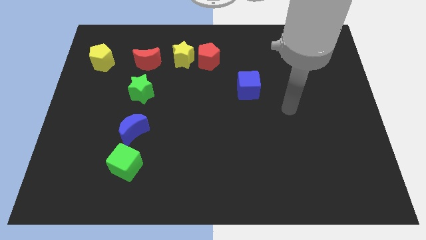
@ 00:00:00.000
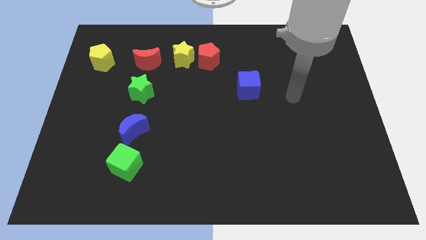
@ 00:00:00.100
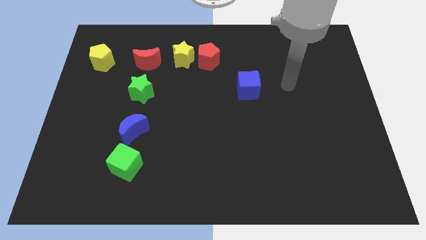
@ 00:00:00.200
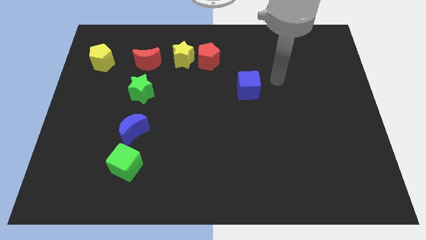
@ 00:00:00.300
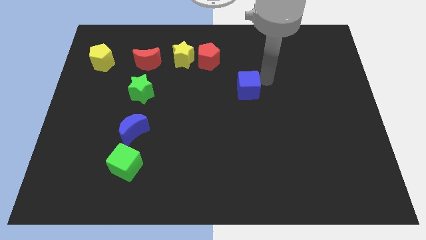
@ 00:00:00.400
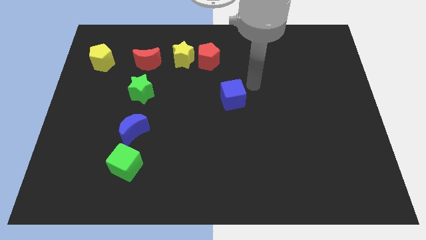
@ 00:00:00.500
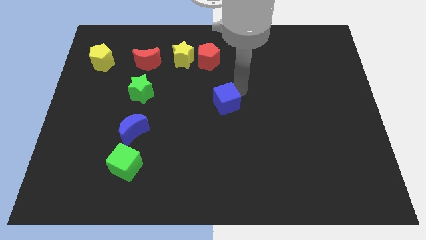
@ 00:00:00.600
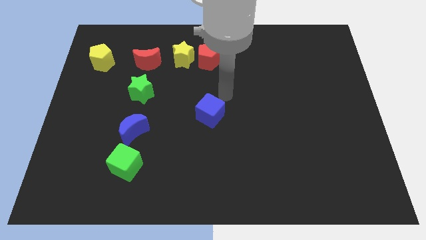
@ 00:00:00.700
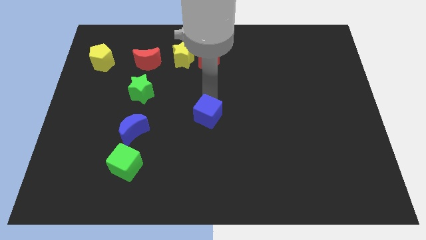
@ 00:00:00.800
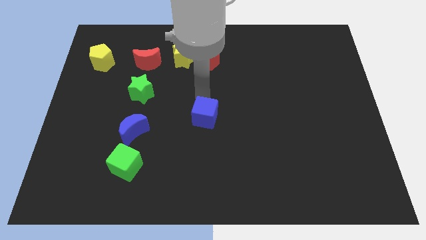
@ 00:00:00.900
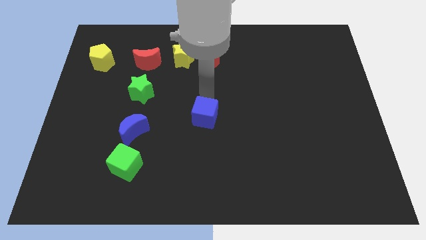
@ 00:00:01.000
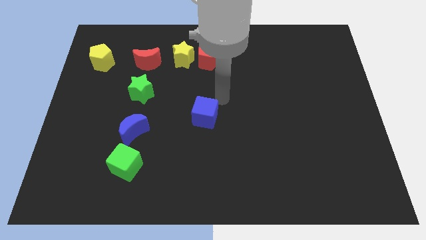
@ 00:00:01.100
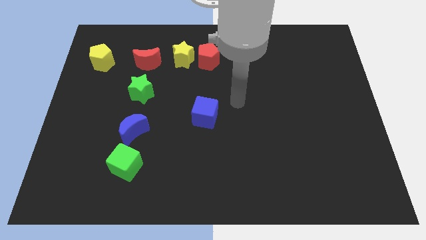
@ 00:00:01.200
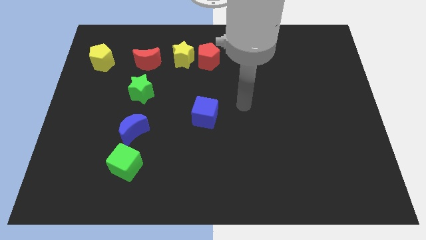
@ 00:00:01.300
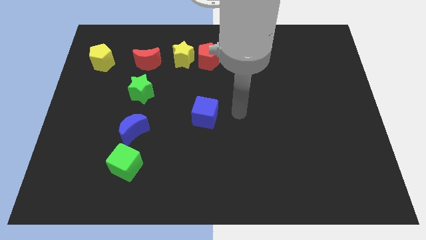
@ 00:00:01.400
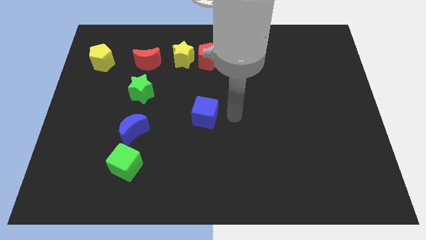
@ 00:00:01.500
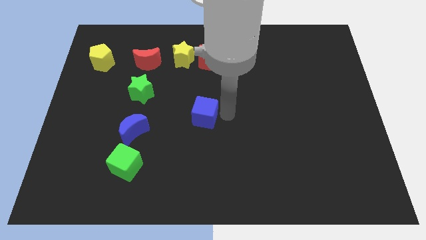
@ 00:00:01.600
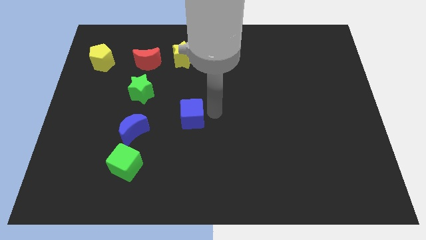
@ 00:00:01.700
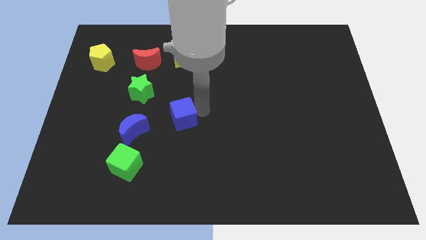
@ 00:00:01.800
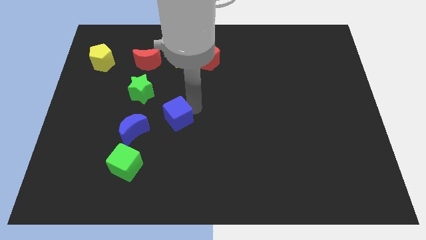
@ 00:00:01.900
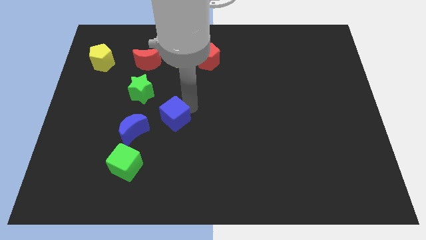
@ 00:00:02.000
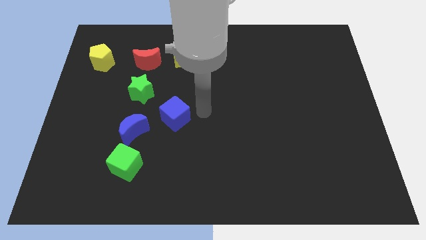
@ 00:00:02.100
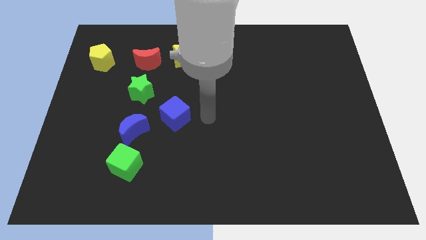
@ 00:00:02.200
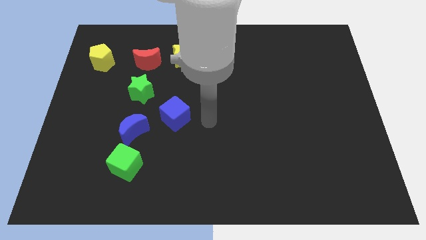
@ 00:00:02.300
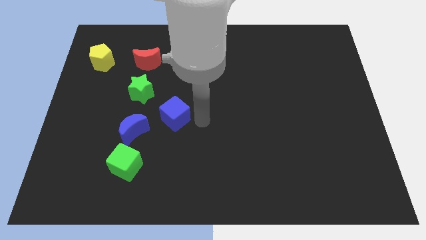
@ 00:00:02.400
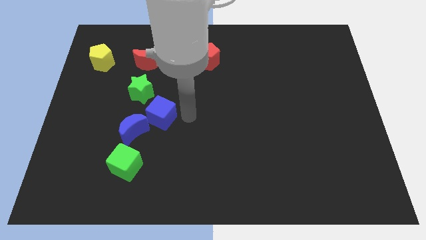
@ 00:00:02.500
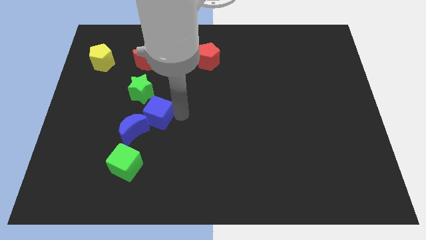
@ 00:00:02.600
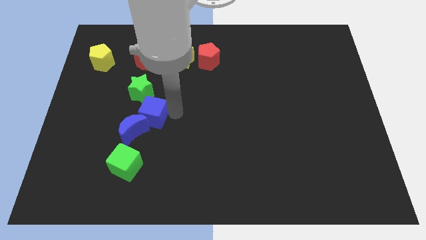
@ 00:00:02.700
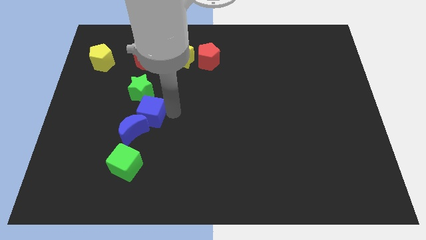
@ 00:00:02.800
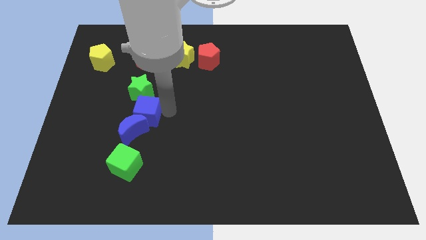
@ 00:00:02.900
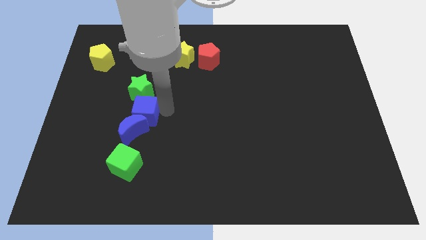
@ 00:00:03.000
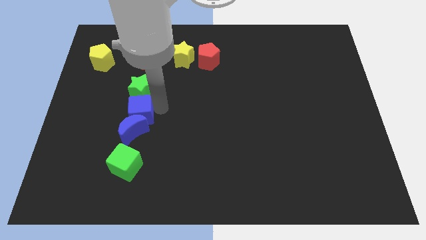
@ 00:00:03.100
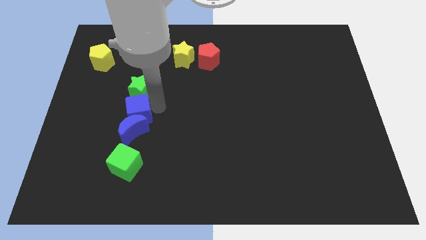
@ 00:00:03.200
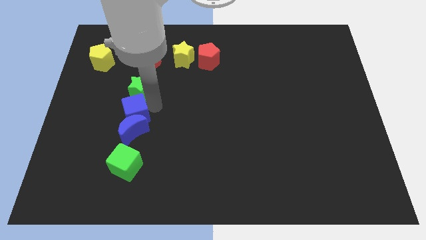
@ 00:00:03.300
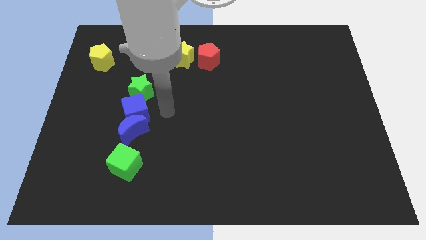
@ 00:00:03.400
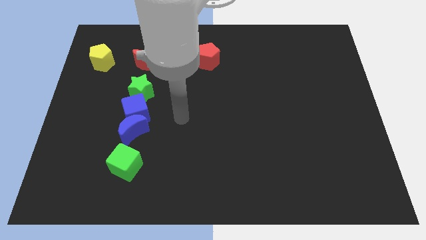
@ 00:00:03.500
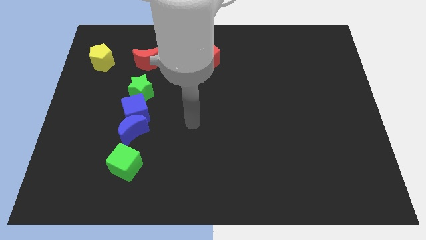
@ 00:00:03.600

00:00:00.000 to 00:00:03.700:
push the blue cube in between the green star and blue moon

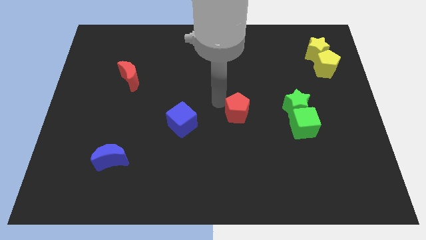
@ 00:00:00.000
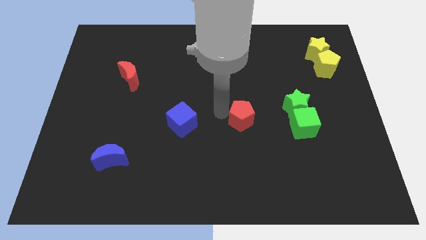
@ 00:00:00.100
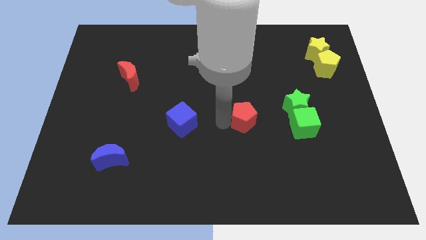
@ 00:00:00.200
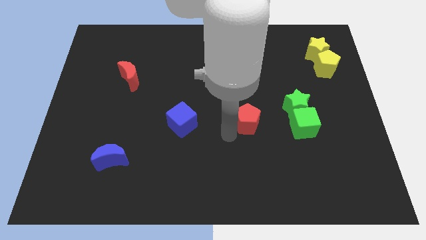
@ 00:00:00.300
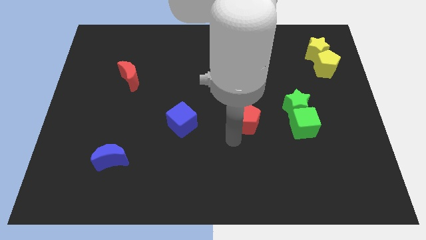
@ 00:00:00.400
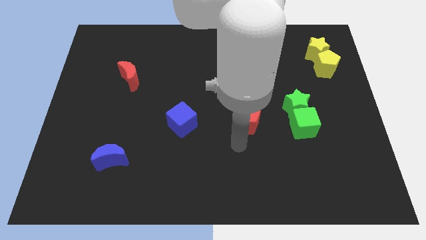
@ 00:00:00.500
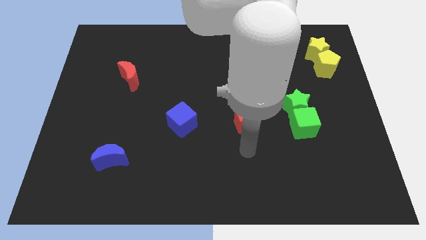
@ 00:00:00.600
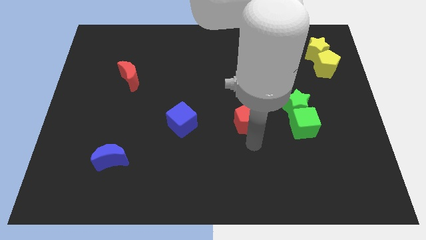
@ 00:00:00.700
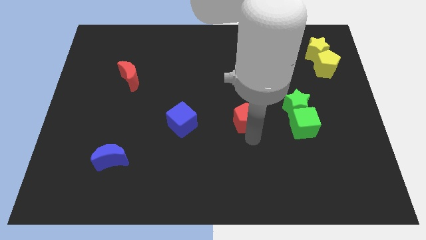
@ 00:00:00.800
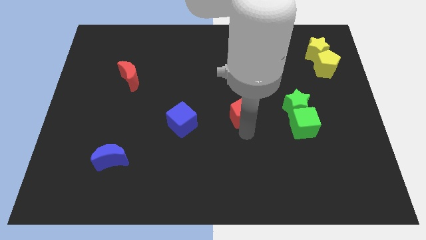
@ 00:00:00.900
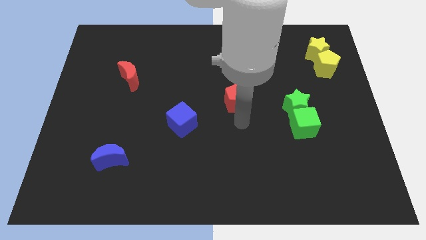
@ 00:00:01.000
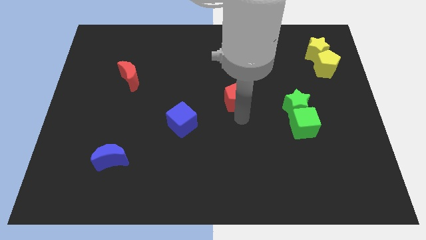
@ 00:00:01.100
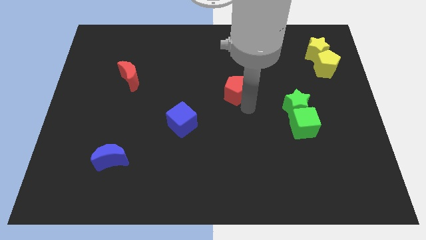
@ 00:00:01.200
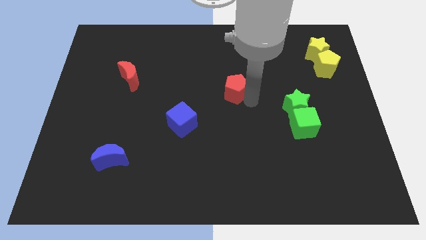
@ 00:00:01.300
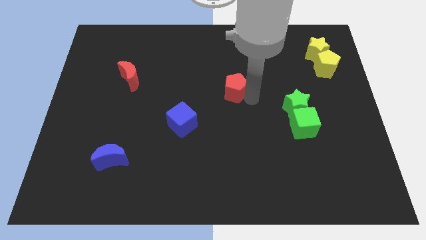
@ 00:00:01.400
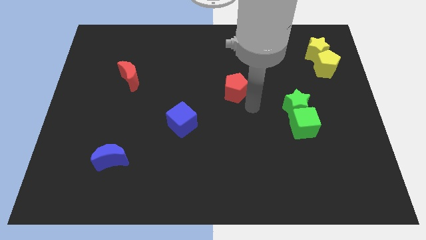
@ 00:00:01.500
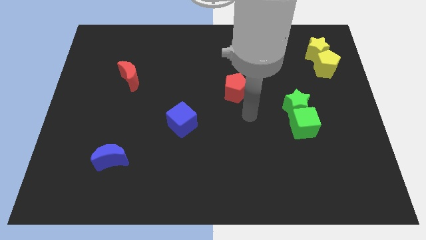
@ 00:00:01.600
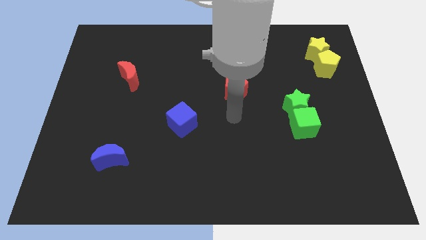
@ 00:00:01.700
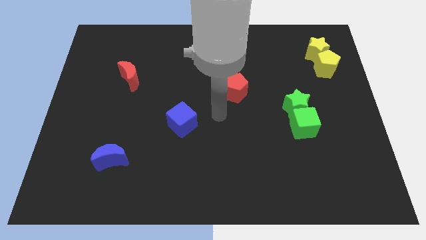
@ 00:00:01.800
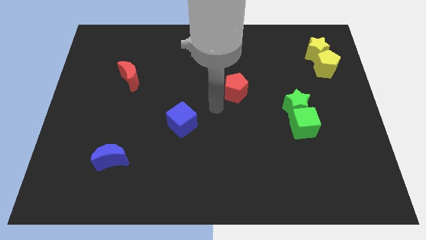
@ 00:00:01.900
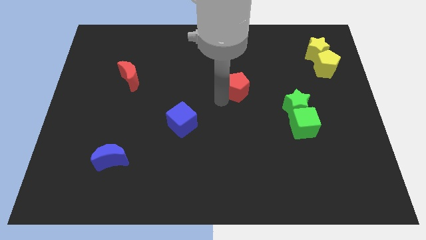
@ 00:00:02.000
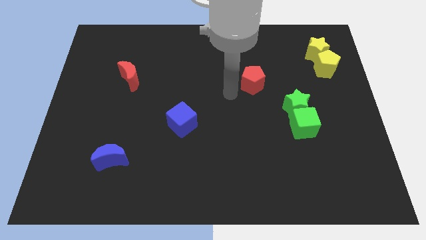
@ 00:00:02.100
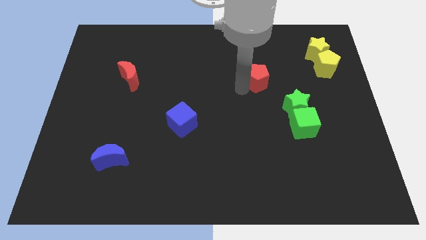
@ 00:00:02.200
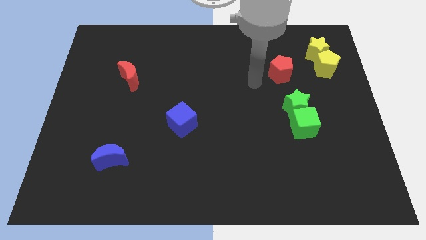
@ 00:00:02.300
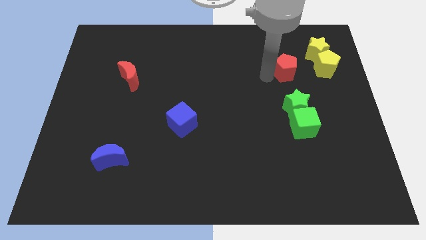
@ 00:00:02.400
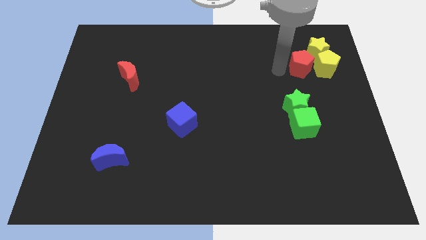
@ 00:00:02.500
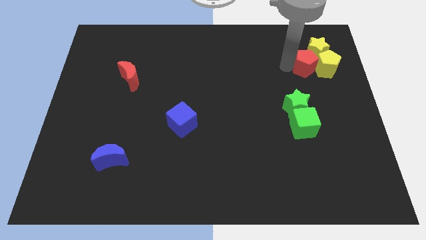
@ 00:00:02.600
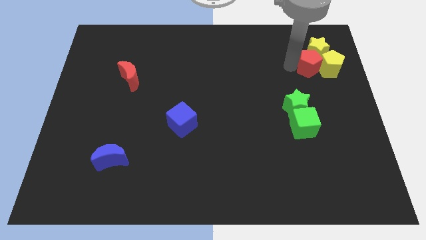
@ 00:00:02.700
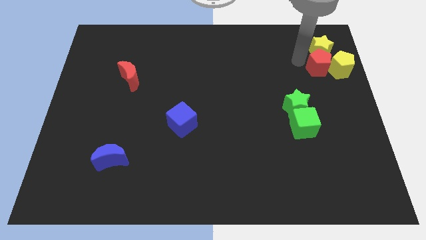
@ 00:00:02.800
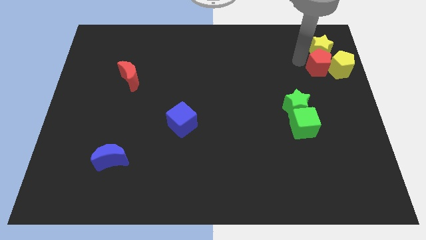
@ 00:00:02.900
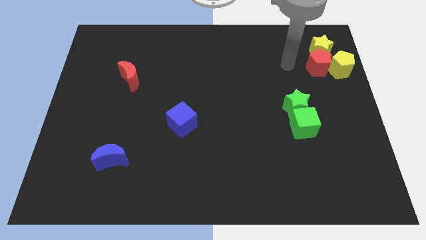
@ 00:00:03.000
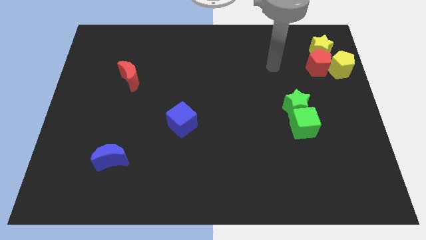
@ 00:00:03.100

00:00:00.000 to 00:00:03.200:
push the red pentagon into the yellow pentagon and the yellow star

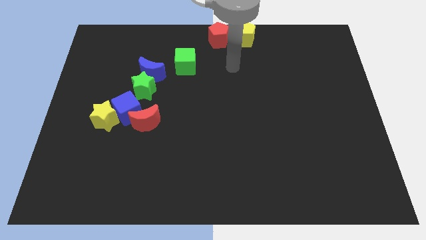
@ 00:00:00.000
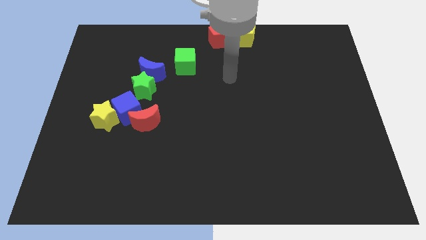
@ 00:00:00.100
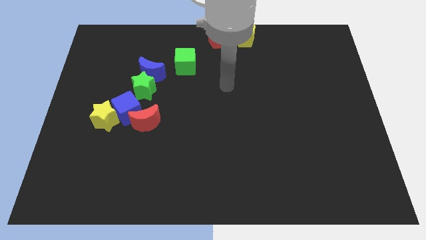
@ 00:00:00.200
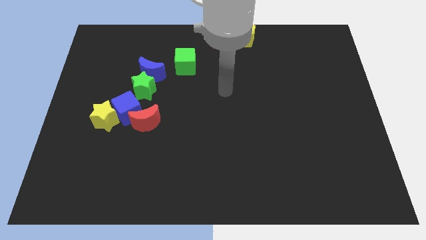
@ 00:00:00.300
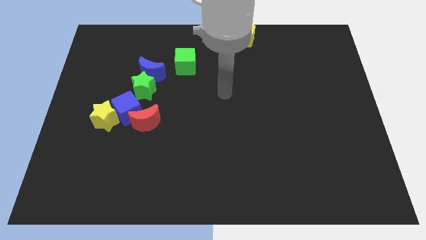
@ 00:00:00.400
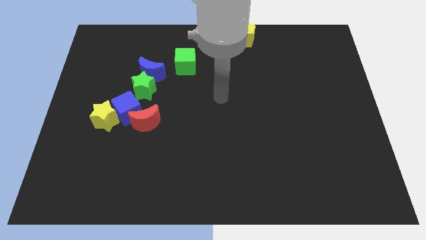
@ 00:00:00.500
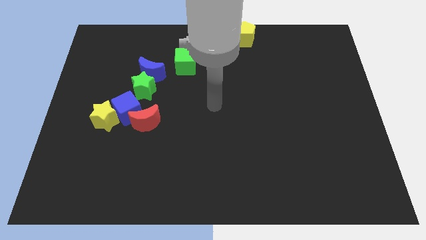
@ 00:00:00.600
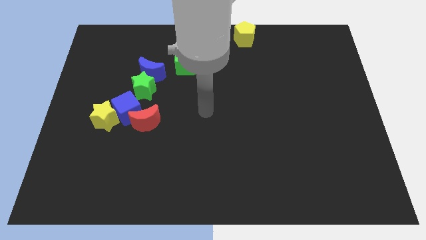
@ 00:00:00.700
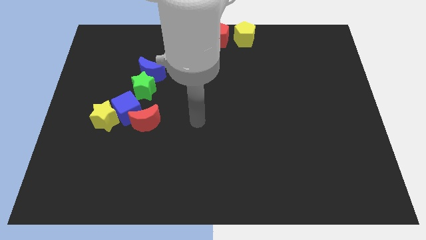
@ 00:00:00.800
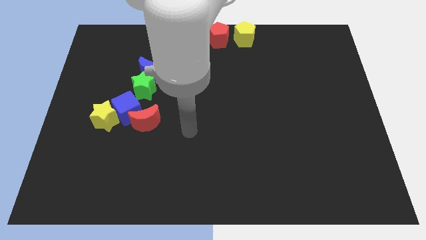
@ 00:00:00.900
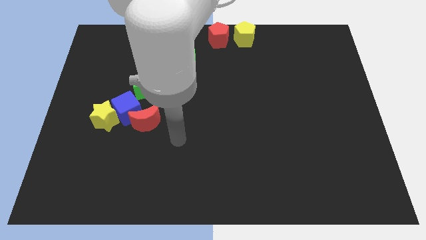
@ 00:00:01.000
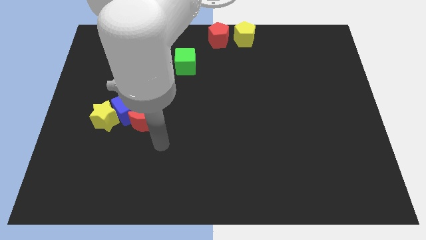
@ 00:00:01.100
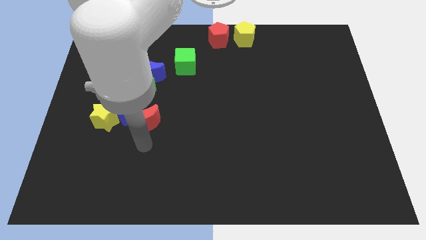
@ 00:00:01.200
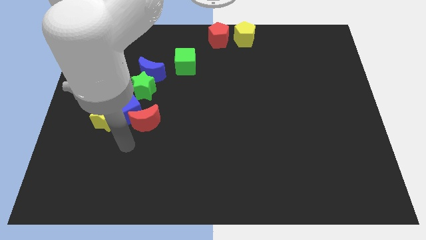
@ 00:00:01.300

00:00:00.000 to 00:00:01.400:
place your hand above the red crescent

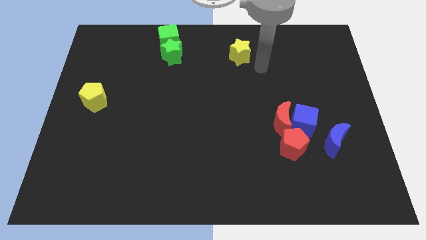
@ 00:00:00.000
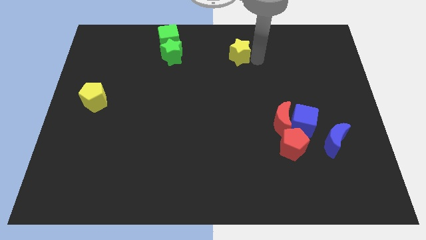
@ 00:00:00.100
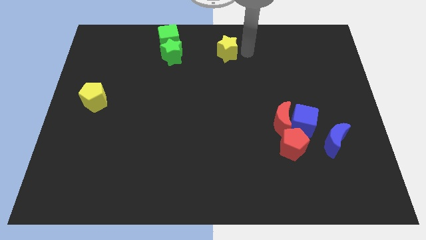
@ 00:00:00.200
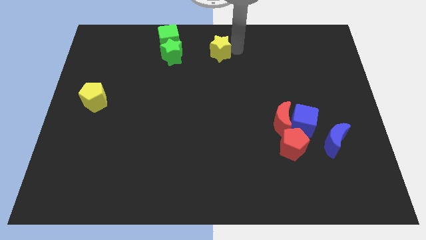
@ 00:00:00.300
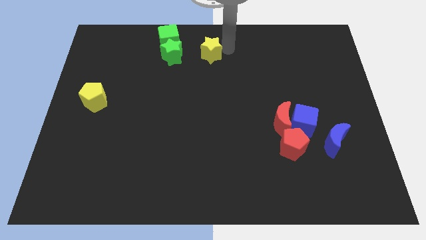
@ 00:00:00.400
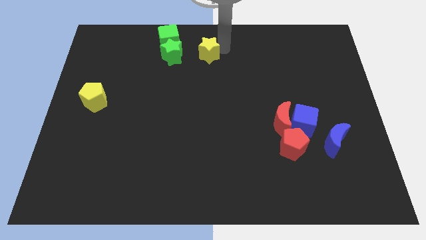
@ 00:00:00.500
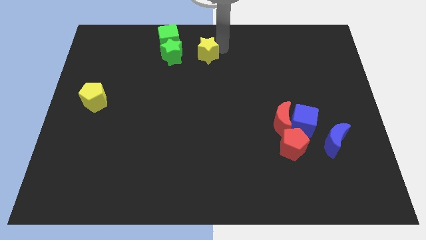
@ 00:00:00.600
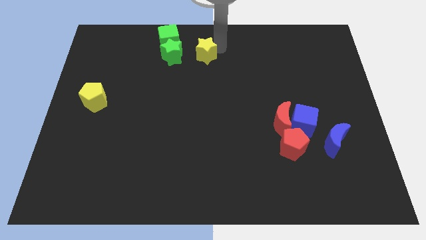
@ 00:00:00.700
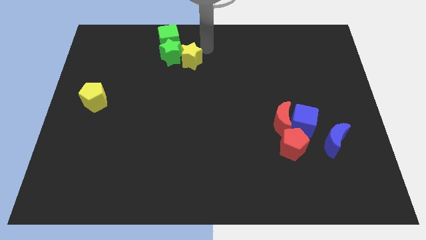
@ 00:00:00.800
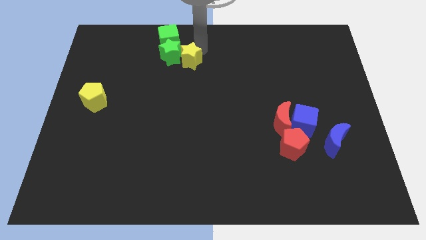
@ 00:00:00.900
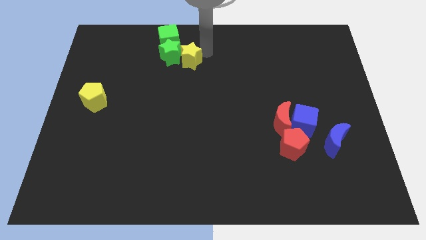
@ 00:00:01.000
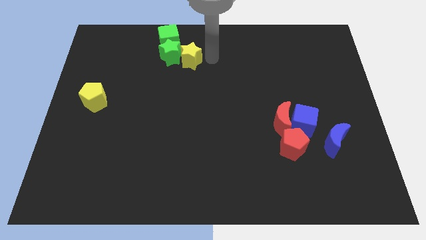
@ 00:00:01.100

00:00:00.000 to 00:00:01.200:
move the yellow star into the right side of the green star
